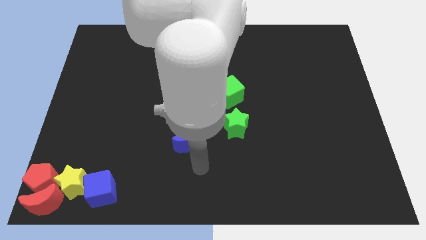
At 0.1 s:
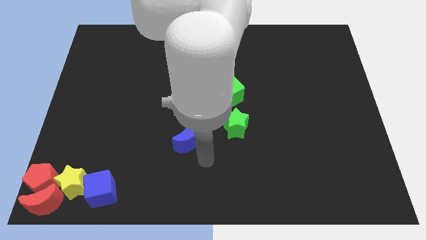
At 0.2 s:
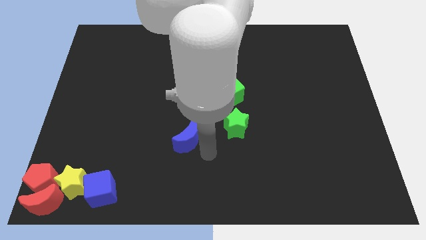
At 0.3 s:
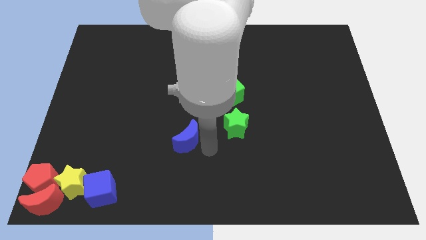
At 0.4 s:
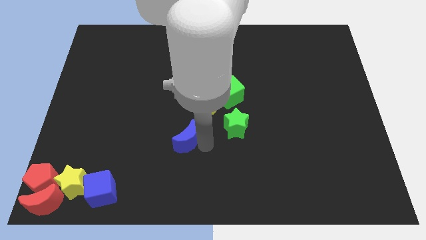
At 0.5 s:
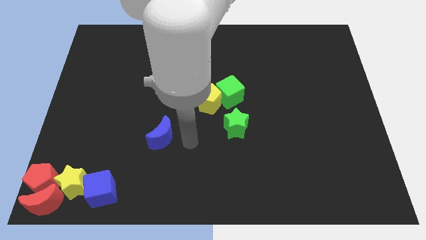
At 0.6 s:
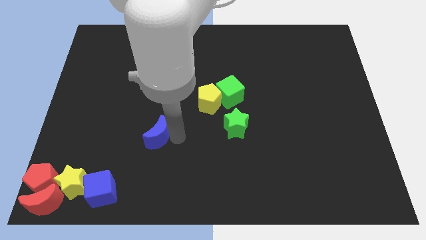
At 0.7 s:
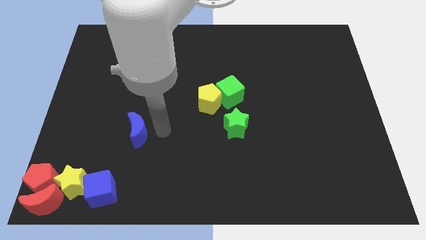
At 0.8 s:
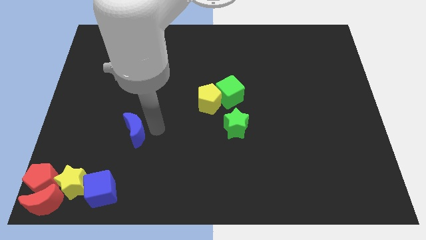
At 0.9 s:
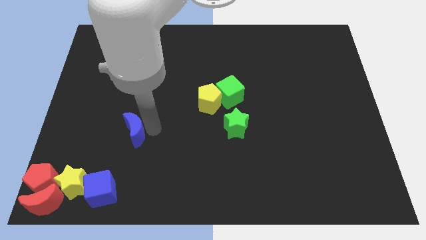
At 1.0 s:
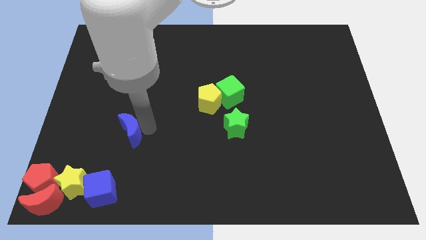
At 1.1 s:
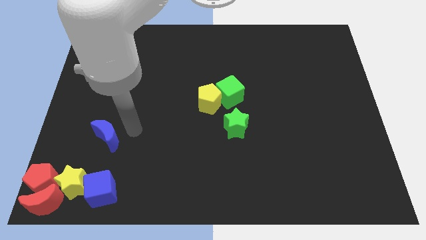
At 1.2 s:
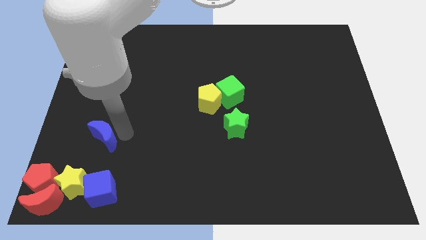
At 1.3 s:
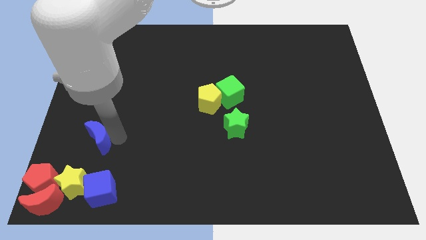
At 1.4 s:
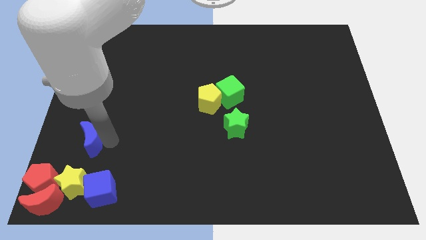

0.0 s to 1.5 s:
place the blue moon above the blue cube

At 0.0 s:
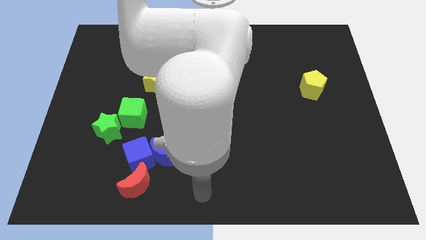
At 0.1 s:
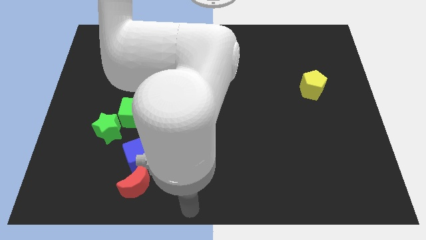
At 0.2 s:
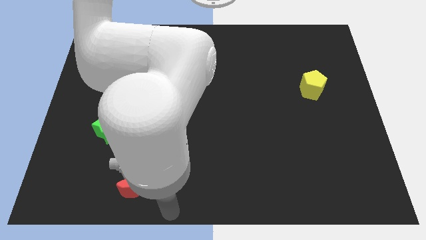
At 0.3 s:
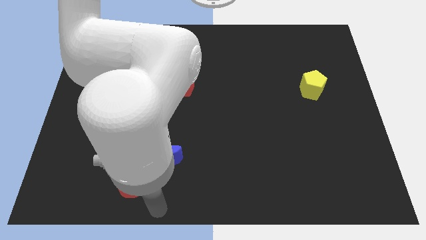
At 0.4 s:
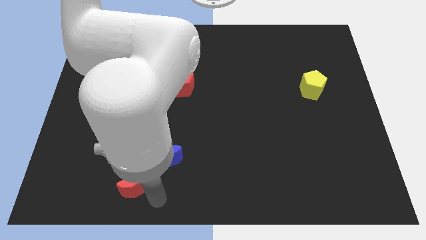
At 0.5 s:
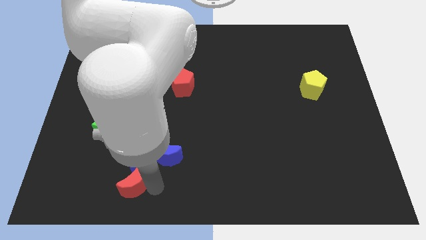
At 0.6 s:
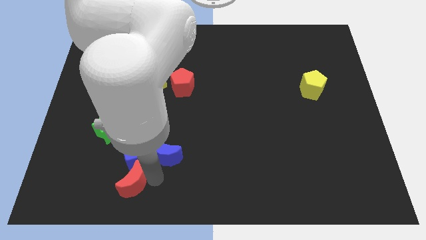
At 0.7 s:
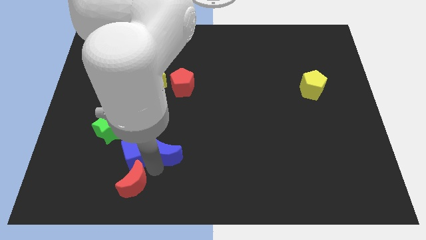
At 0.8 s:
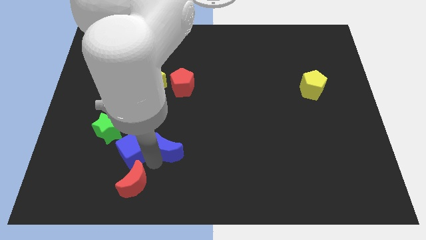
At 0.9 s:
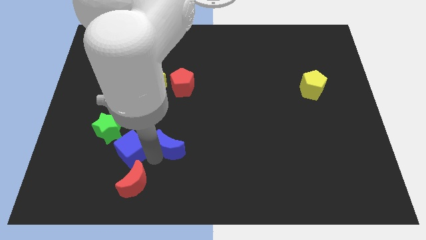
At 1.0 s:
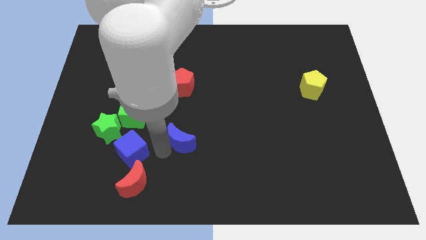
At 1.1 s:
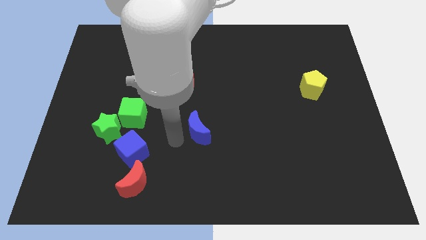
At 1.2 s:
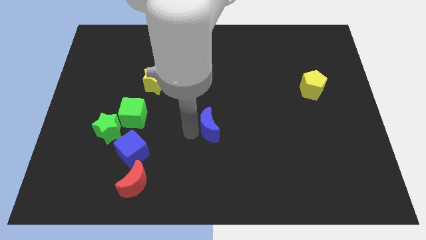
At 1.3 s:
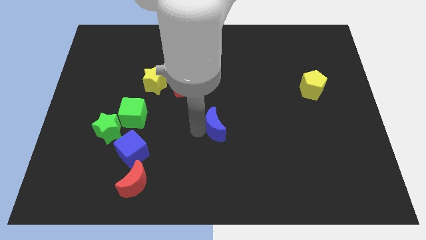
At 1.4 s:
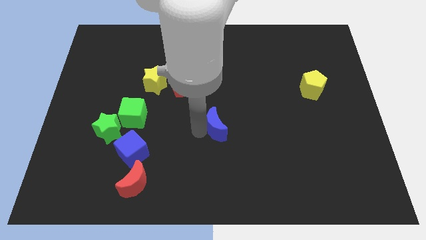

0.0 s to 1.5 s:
push the blue crescent away from the blue cube

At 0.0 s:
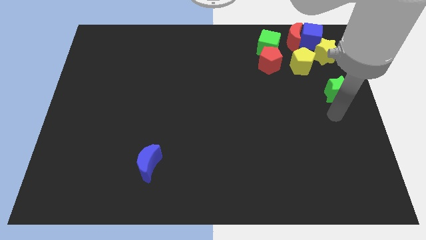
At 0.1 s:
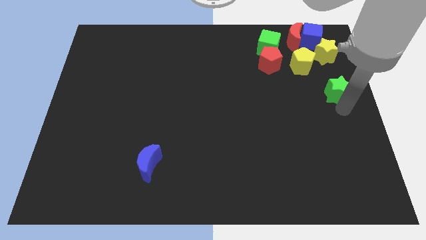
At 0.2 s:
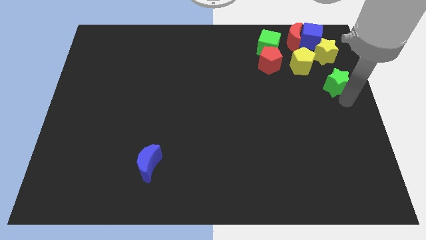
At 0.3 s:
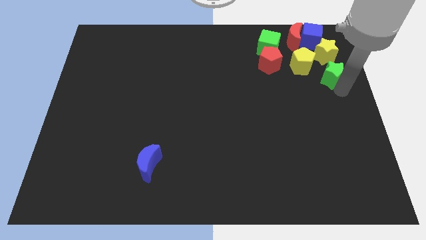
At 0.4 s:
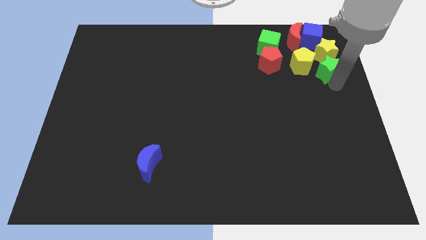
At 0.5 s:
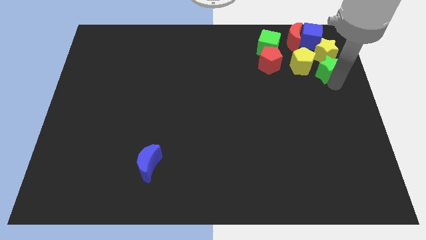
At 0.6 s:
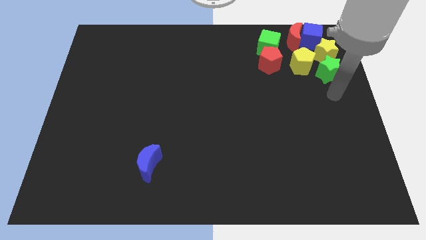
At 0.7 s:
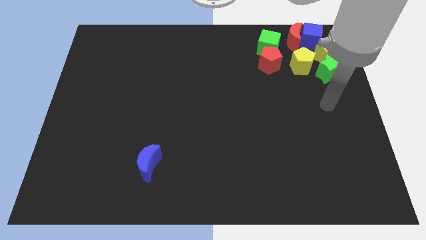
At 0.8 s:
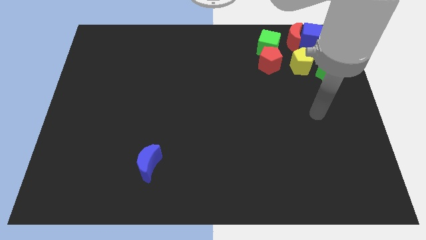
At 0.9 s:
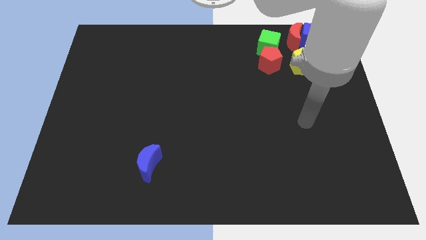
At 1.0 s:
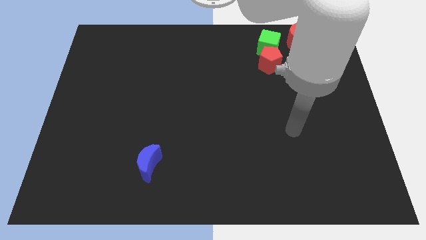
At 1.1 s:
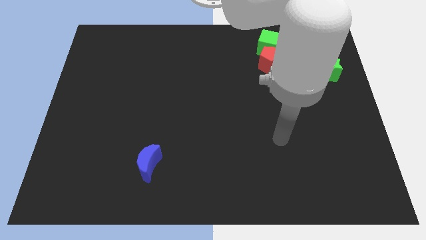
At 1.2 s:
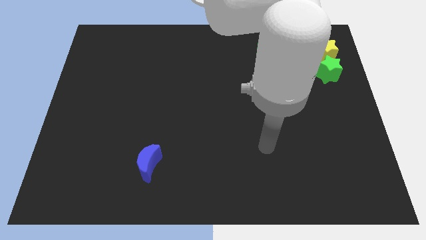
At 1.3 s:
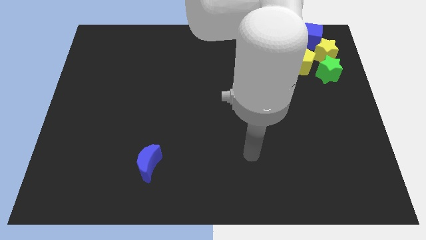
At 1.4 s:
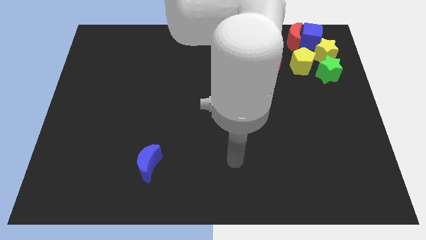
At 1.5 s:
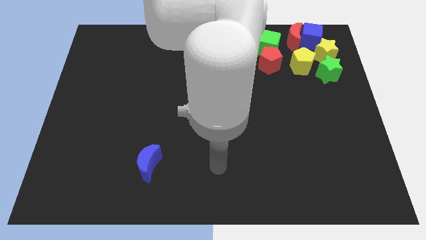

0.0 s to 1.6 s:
place the green star to the bottom of the yellow star

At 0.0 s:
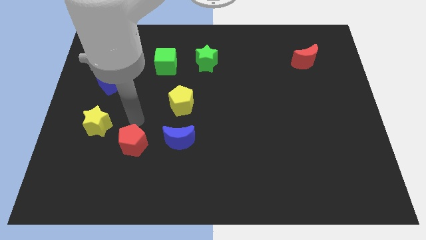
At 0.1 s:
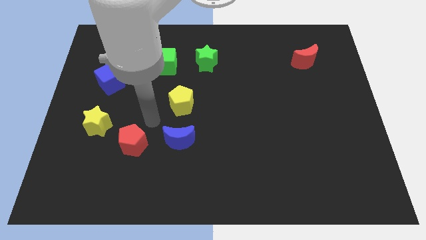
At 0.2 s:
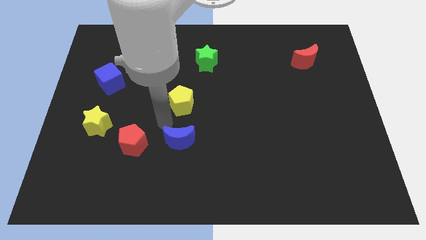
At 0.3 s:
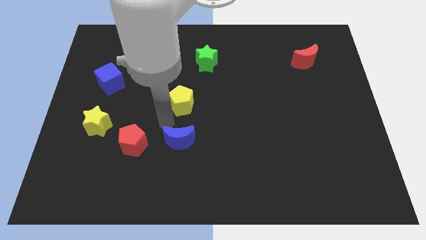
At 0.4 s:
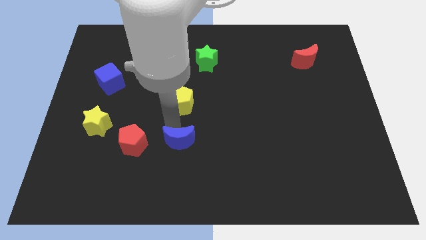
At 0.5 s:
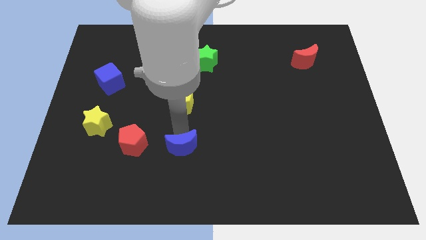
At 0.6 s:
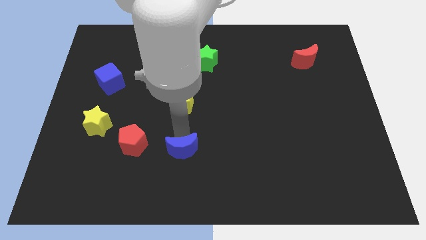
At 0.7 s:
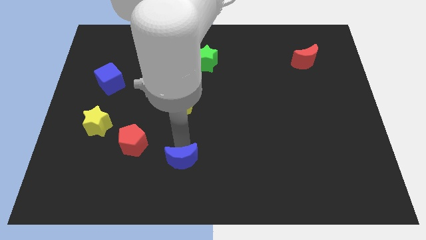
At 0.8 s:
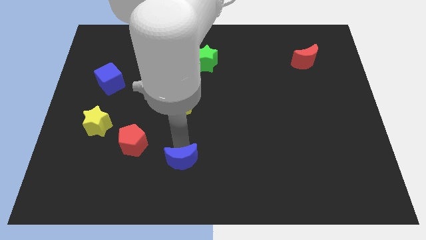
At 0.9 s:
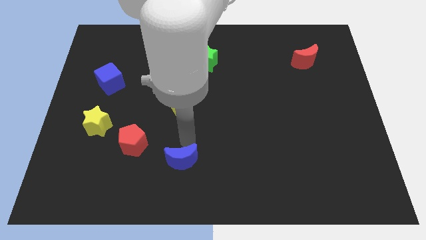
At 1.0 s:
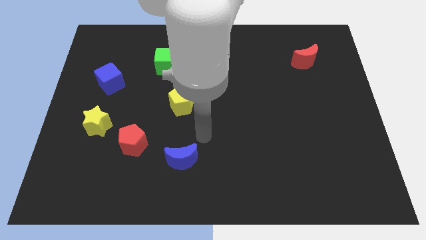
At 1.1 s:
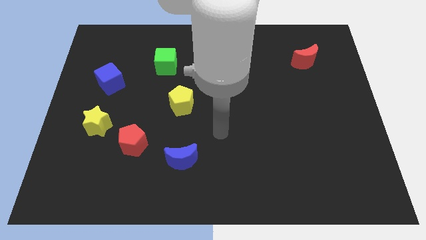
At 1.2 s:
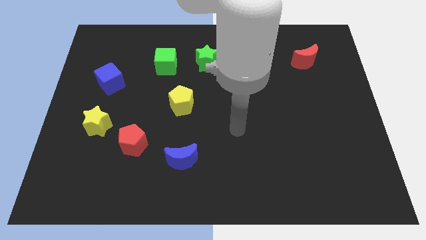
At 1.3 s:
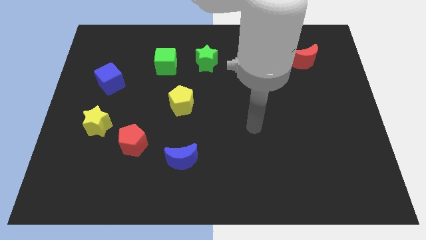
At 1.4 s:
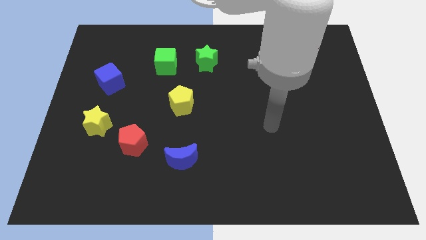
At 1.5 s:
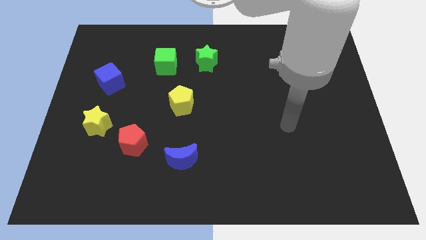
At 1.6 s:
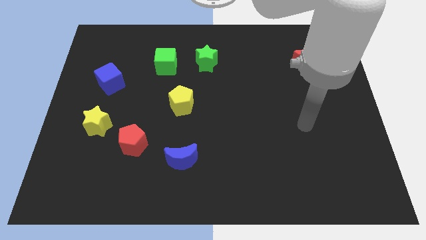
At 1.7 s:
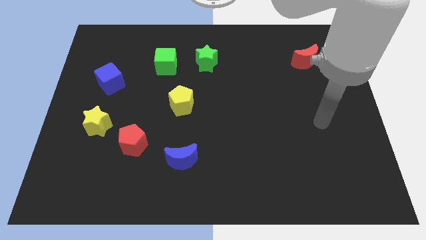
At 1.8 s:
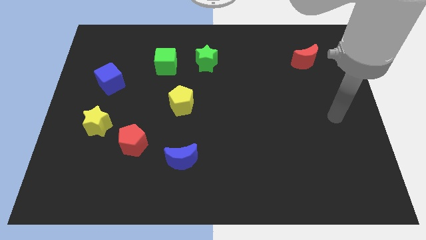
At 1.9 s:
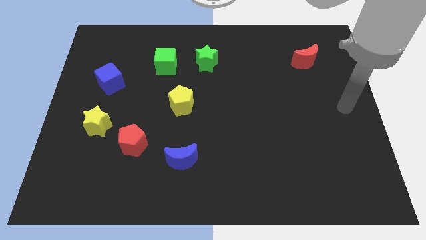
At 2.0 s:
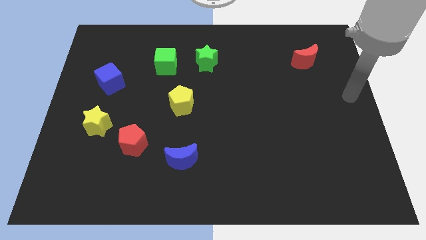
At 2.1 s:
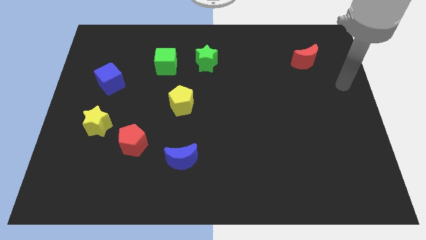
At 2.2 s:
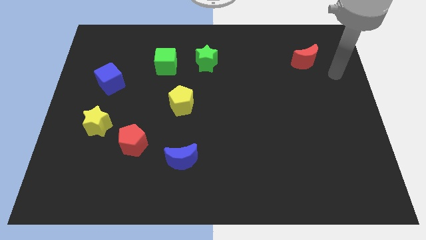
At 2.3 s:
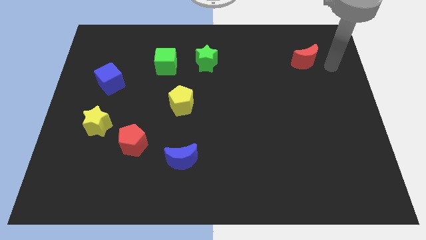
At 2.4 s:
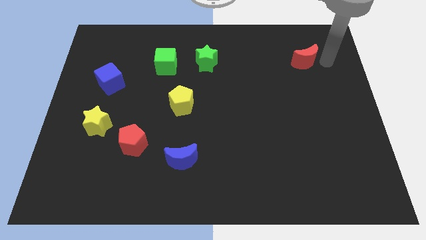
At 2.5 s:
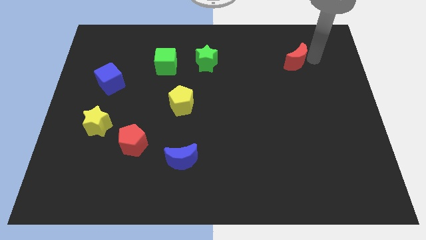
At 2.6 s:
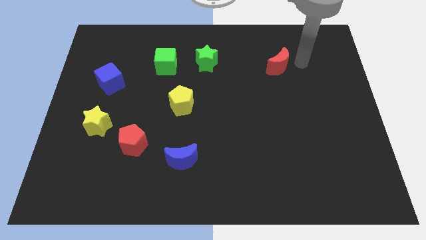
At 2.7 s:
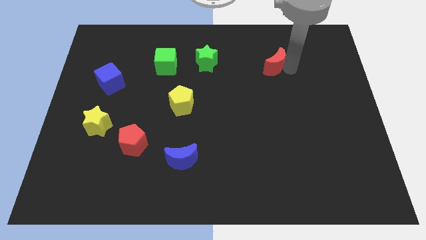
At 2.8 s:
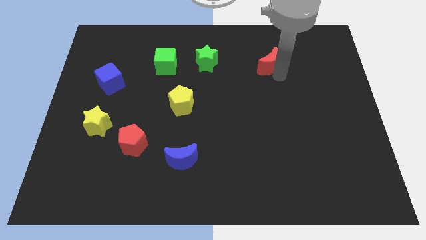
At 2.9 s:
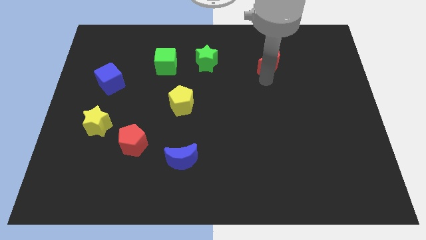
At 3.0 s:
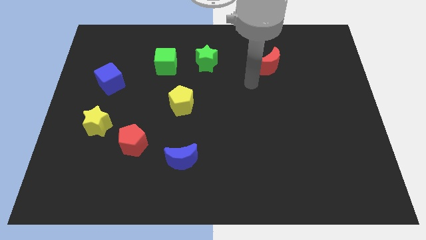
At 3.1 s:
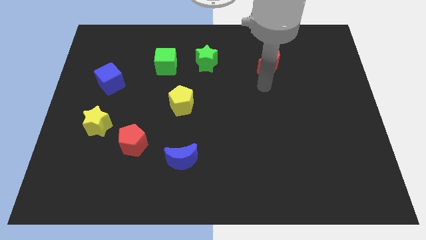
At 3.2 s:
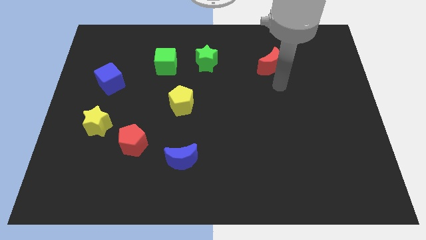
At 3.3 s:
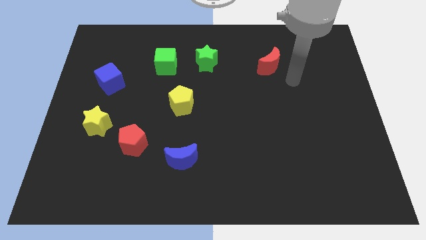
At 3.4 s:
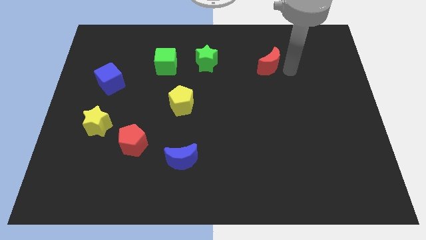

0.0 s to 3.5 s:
push the blue moon towards bottom center of the board
